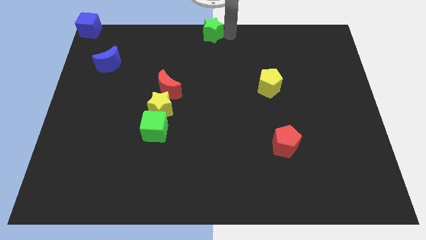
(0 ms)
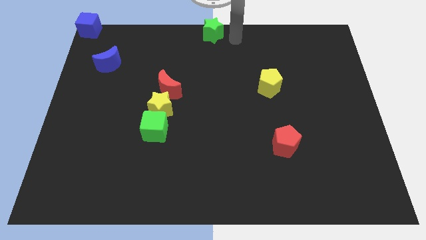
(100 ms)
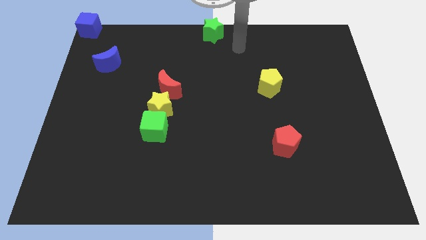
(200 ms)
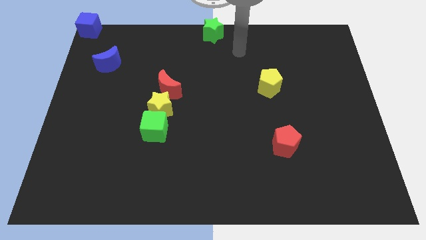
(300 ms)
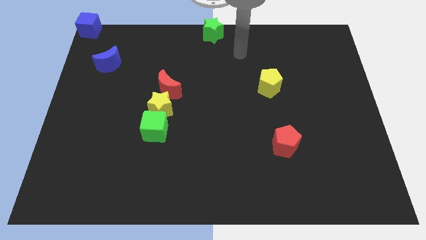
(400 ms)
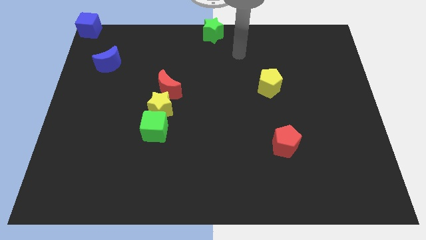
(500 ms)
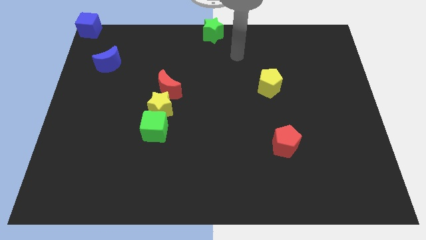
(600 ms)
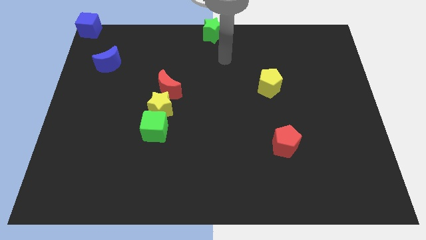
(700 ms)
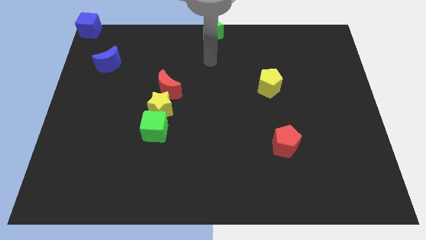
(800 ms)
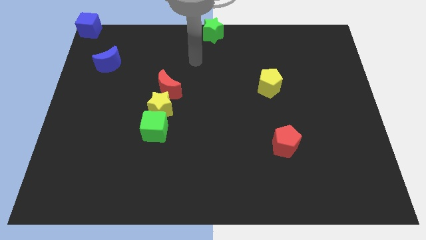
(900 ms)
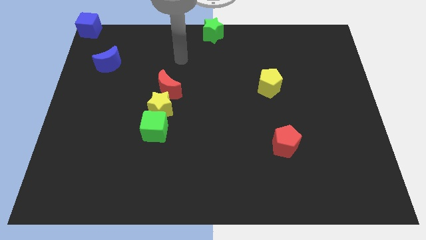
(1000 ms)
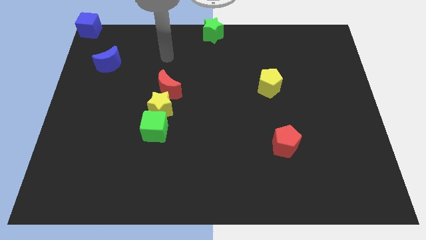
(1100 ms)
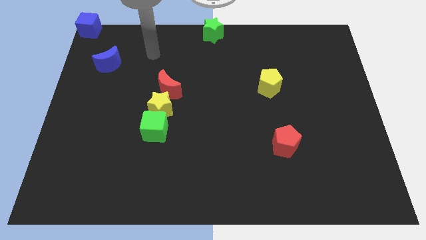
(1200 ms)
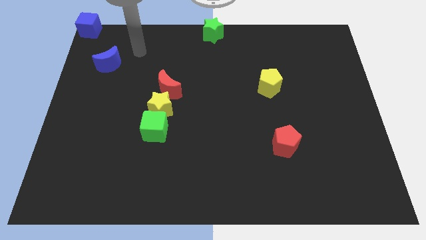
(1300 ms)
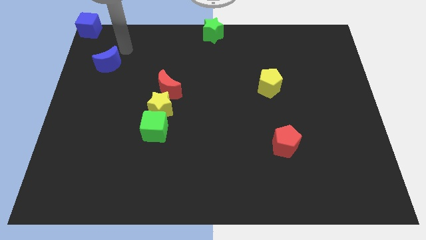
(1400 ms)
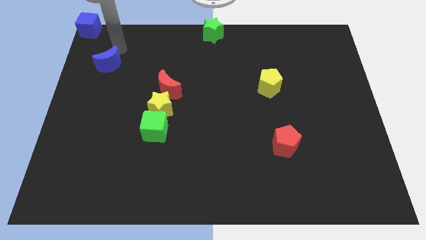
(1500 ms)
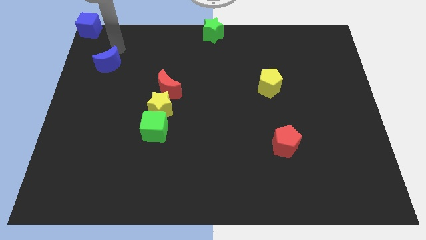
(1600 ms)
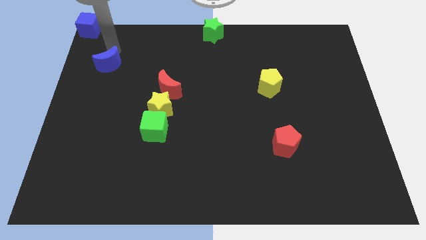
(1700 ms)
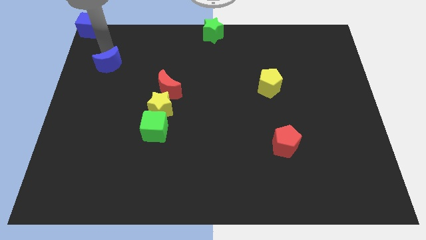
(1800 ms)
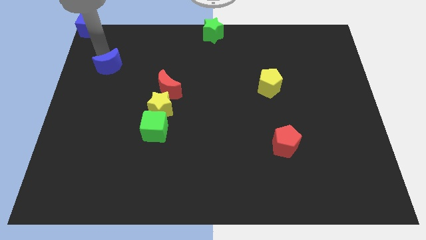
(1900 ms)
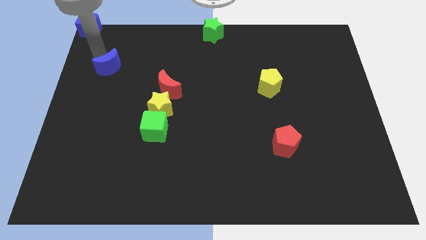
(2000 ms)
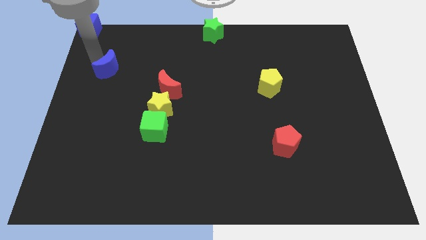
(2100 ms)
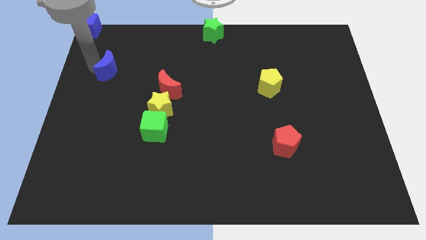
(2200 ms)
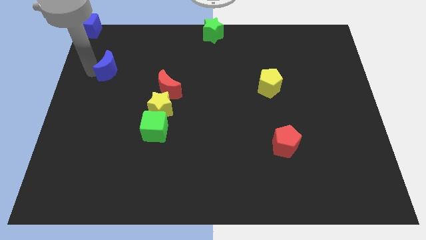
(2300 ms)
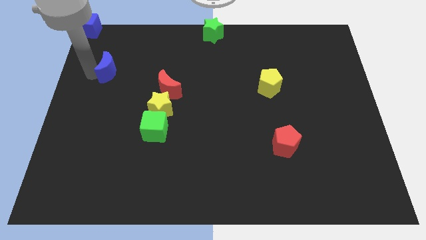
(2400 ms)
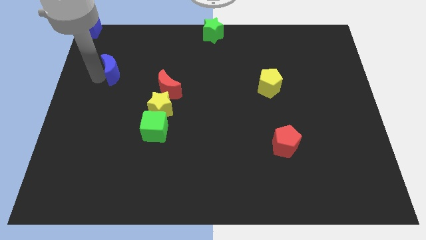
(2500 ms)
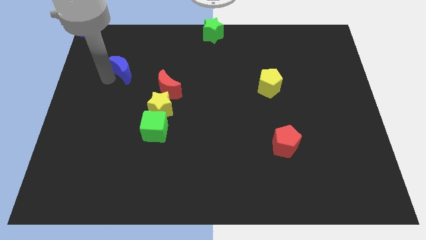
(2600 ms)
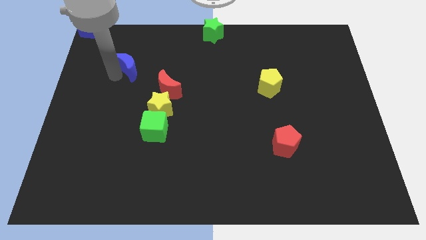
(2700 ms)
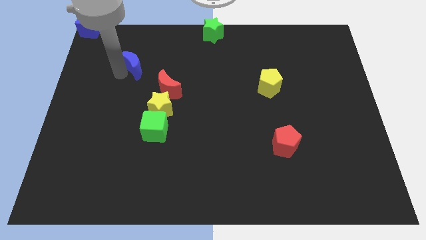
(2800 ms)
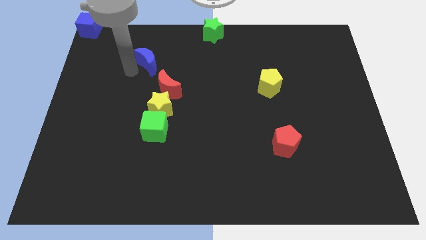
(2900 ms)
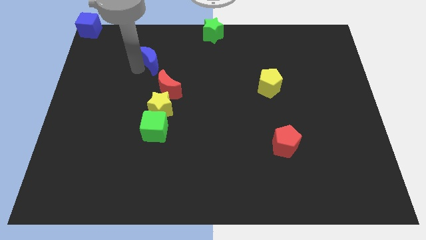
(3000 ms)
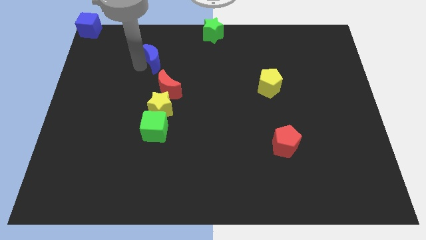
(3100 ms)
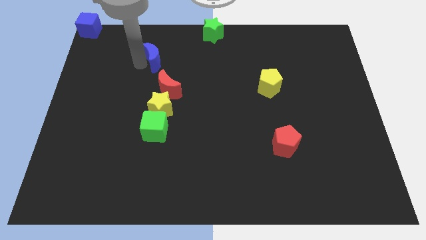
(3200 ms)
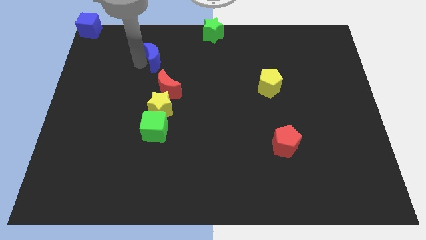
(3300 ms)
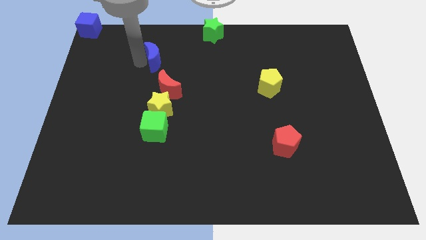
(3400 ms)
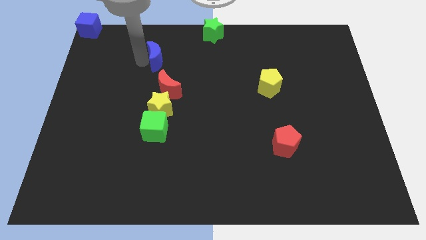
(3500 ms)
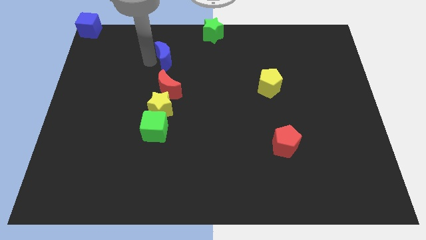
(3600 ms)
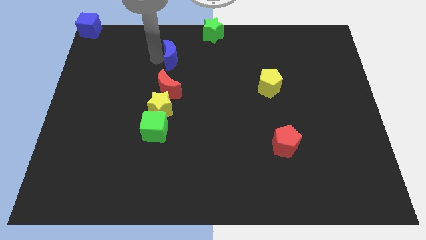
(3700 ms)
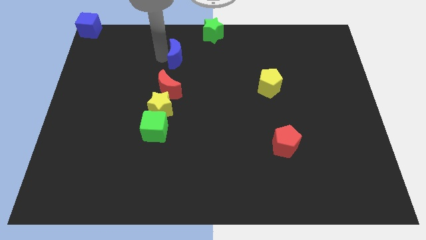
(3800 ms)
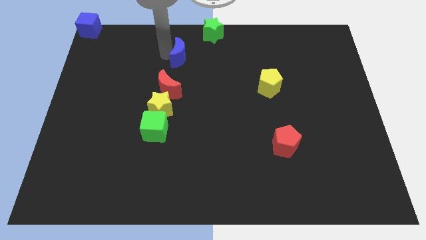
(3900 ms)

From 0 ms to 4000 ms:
move the blue crescent to the top of the red crescent

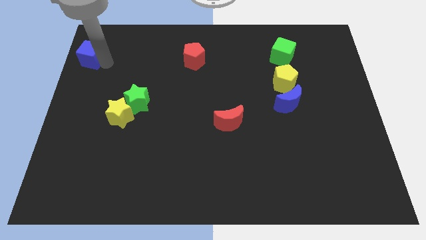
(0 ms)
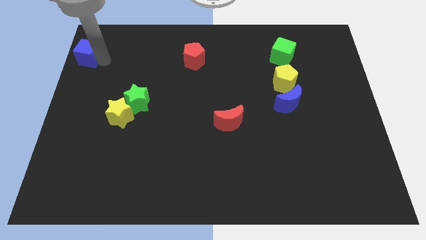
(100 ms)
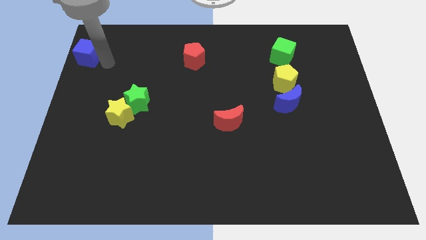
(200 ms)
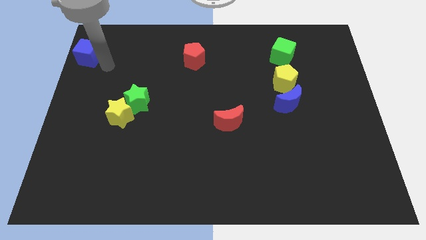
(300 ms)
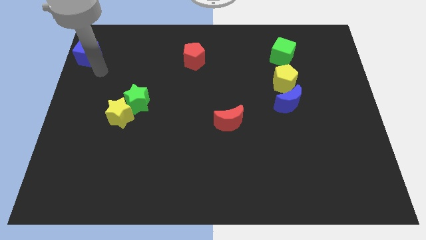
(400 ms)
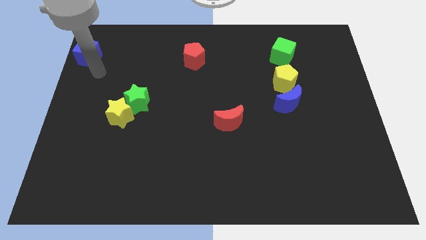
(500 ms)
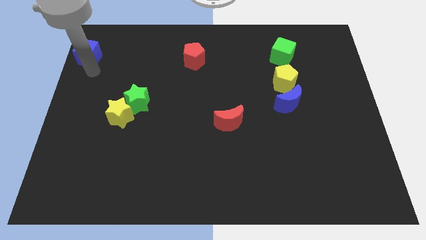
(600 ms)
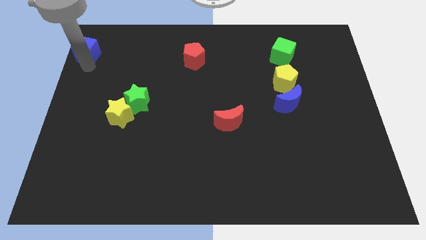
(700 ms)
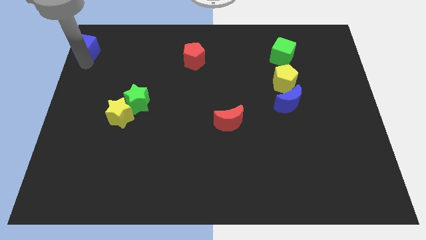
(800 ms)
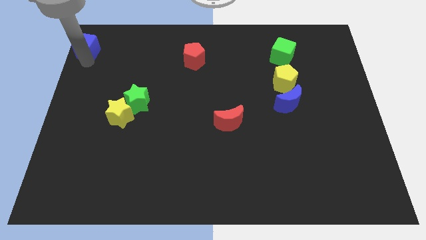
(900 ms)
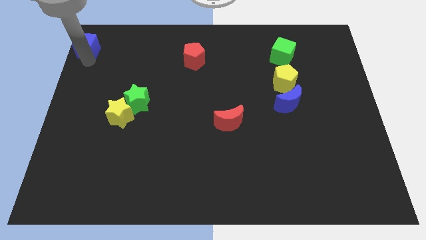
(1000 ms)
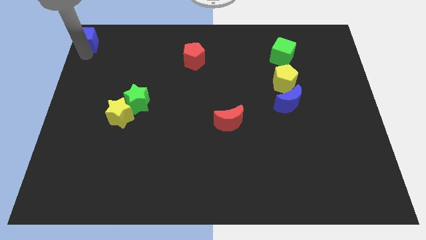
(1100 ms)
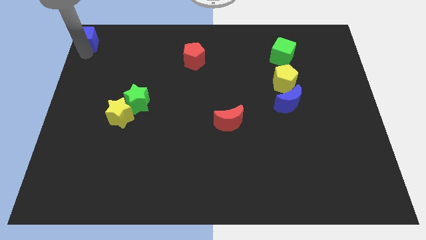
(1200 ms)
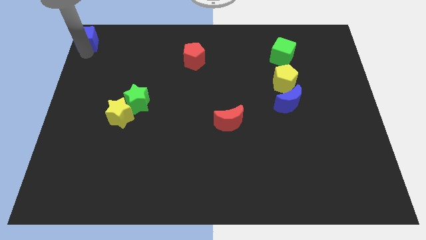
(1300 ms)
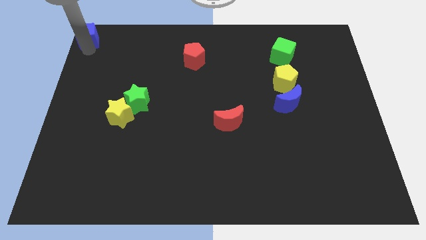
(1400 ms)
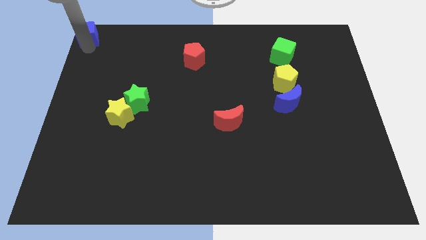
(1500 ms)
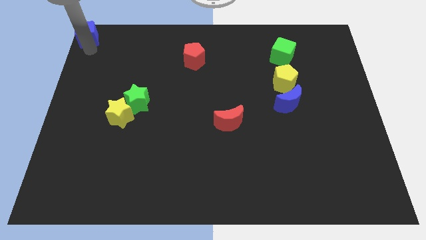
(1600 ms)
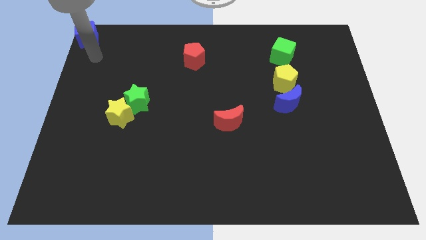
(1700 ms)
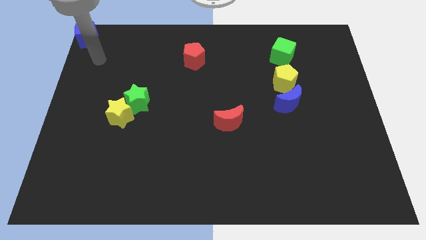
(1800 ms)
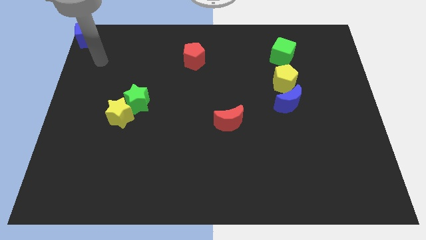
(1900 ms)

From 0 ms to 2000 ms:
place the blue cube to the top left corner of the board

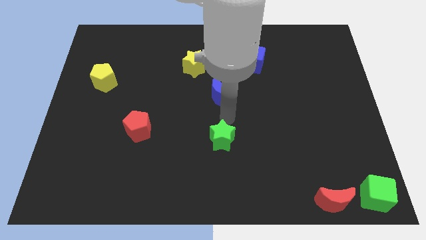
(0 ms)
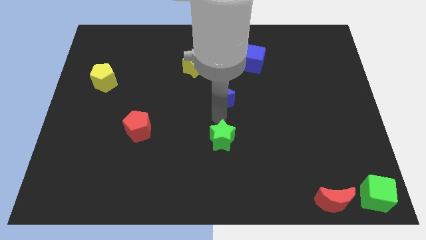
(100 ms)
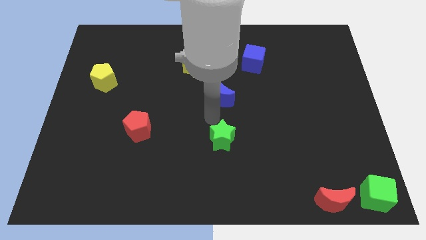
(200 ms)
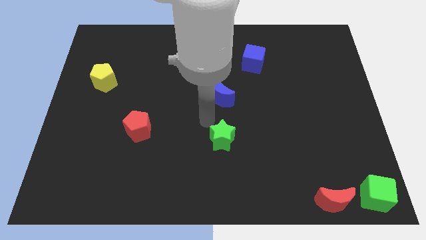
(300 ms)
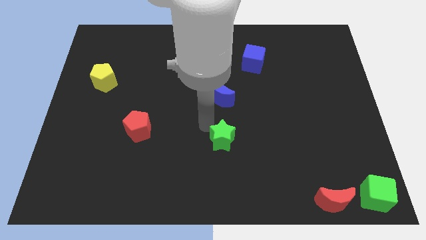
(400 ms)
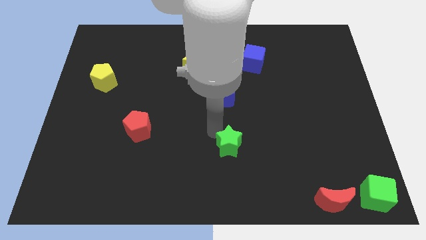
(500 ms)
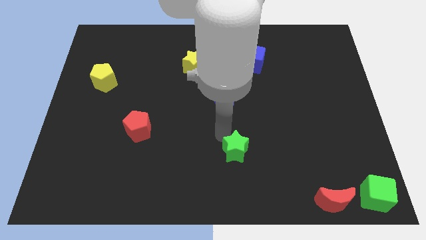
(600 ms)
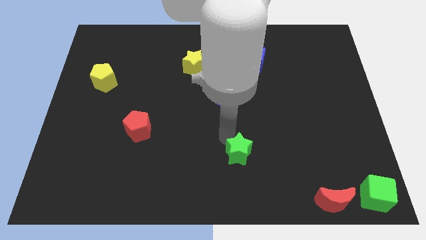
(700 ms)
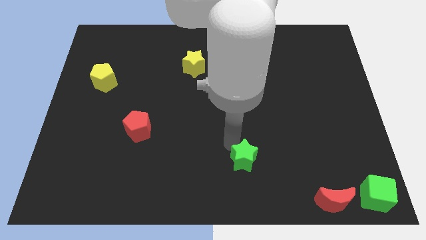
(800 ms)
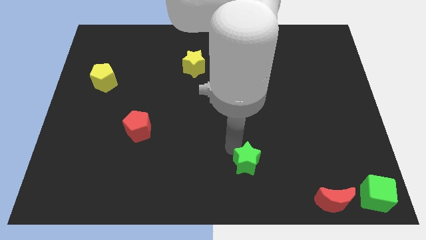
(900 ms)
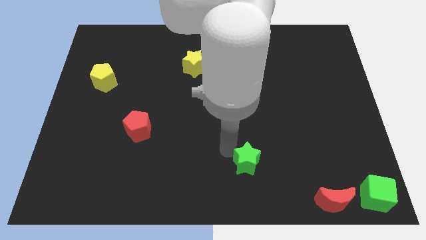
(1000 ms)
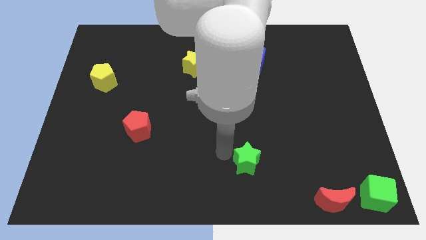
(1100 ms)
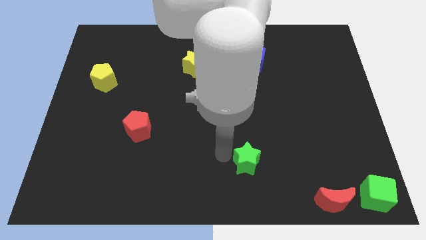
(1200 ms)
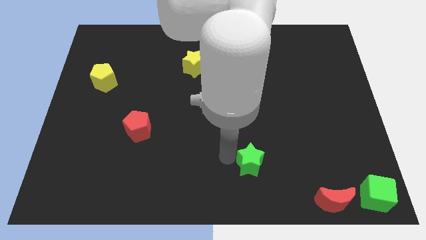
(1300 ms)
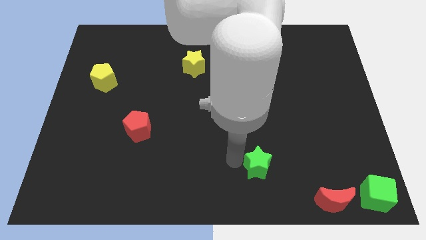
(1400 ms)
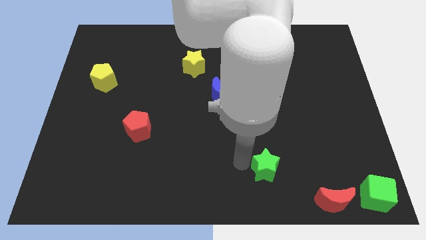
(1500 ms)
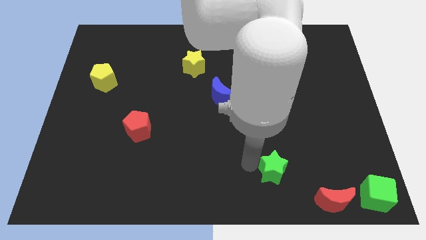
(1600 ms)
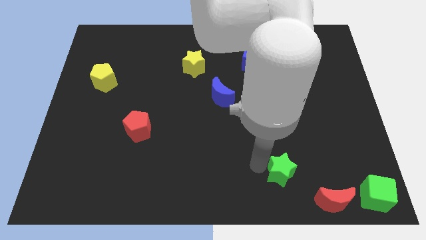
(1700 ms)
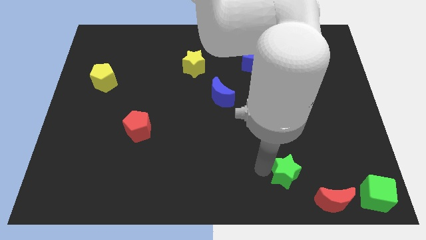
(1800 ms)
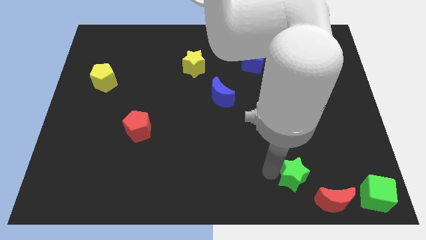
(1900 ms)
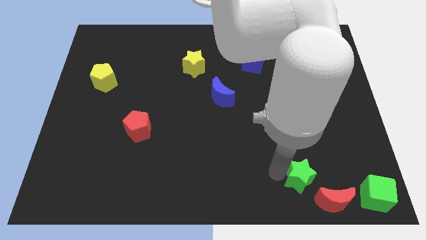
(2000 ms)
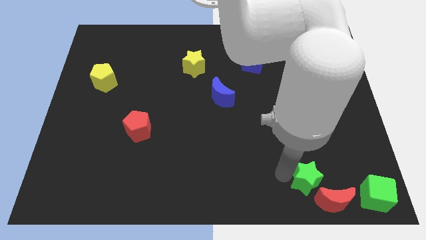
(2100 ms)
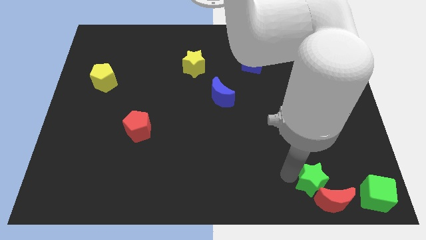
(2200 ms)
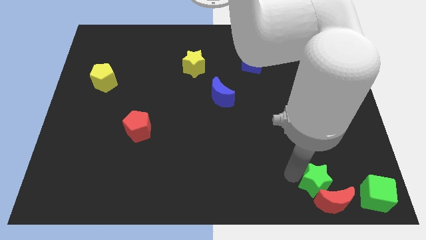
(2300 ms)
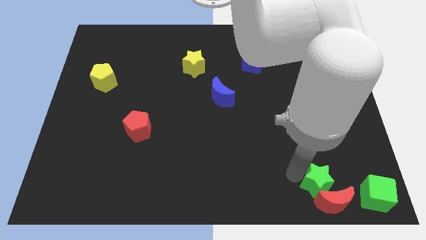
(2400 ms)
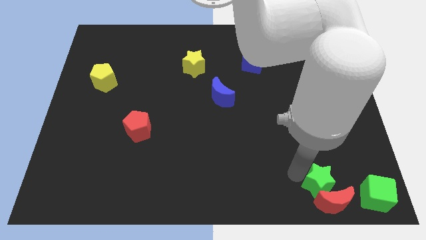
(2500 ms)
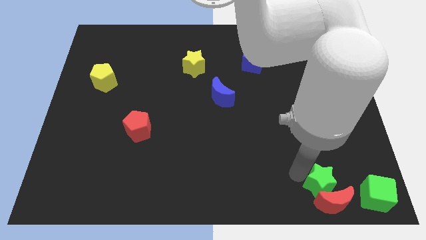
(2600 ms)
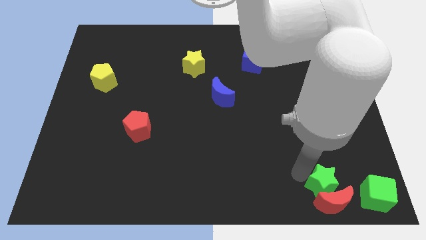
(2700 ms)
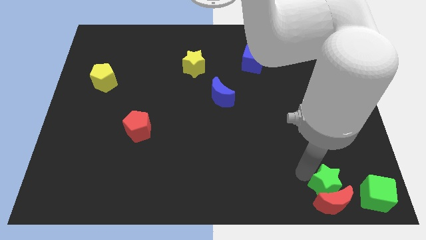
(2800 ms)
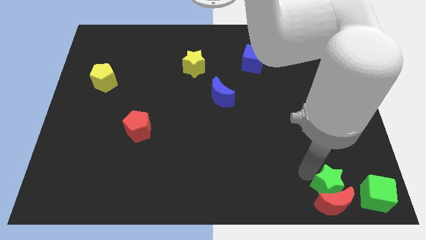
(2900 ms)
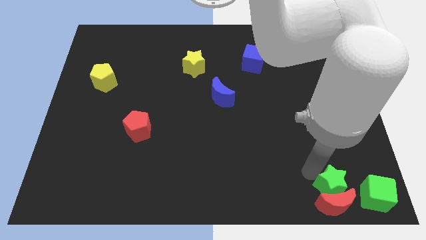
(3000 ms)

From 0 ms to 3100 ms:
move the green star above the red moon
